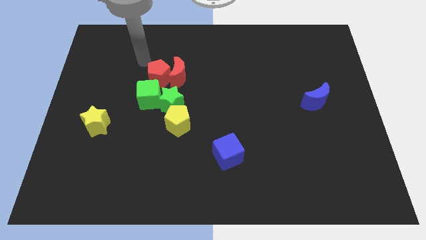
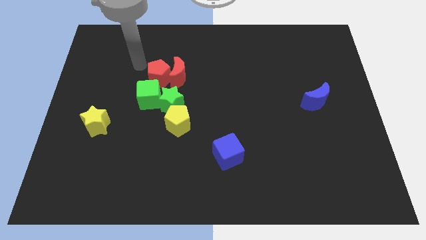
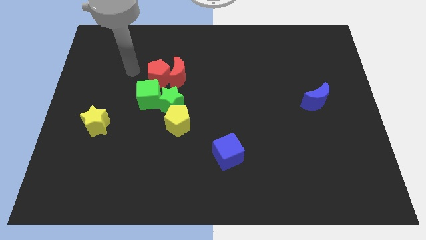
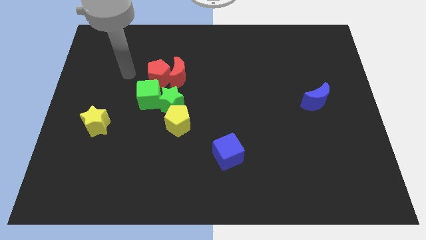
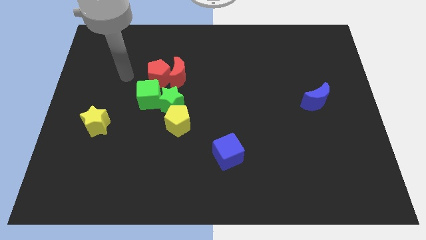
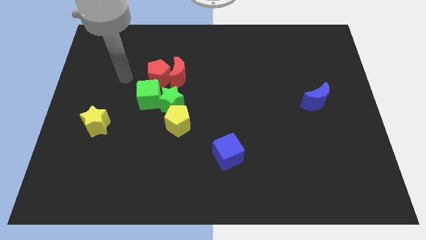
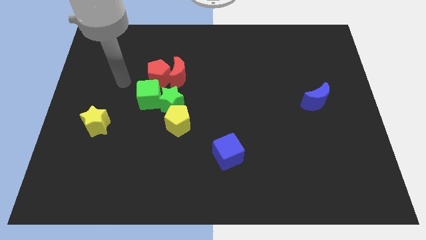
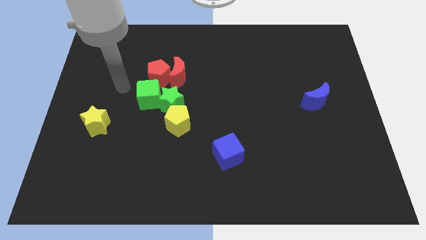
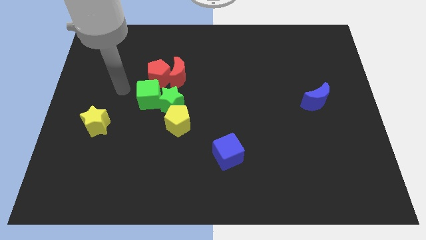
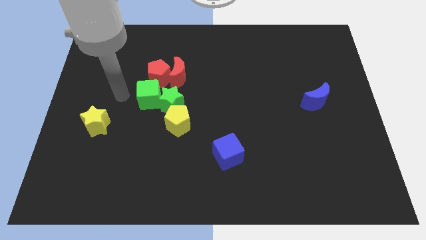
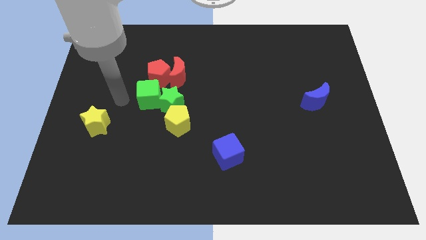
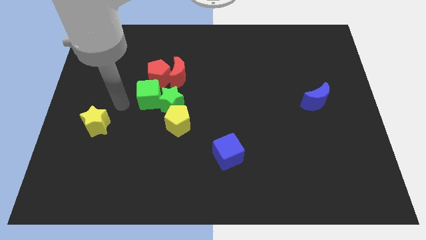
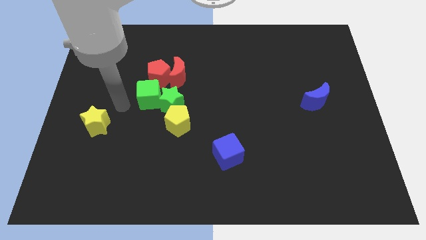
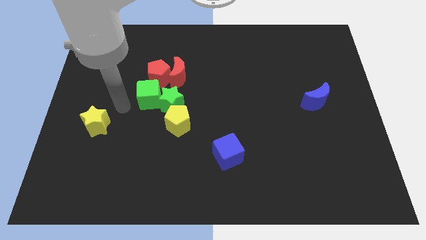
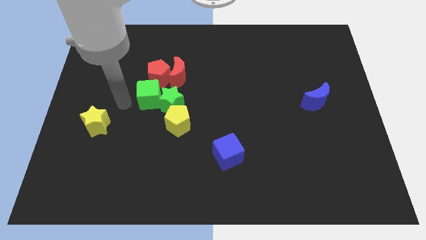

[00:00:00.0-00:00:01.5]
place your arm to the left of green cube

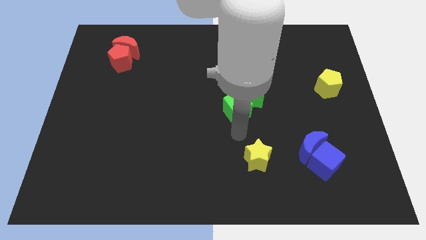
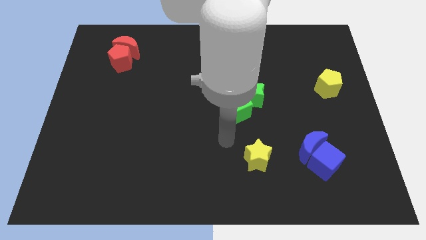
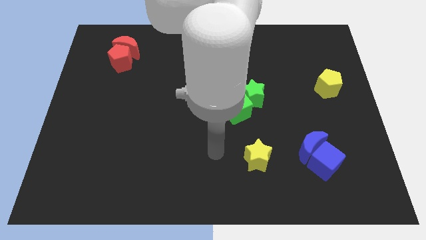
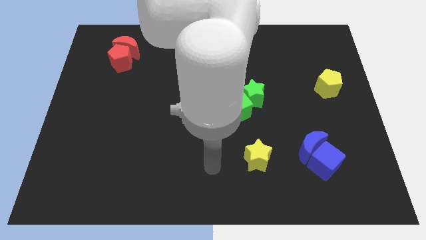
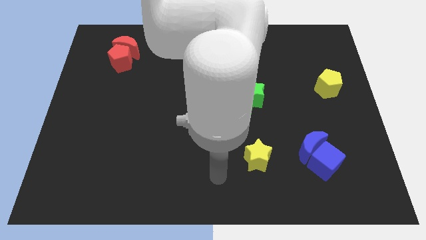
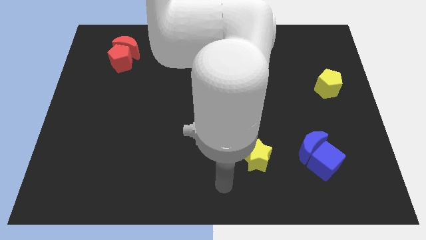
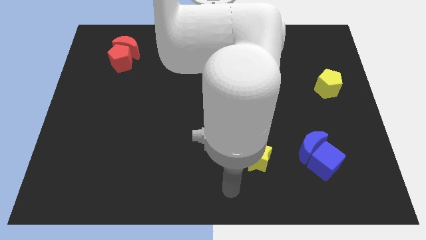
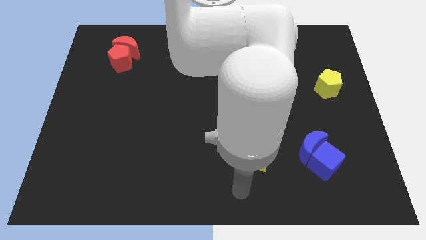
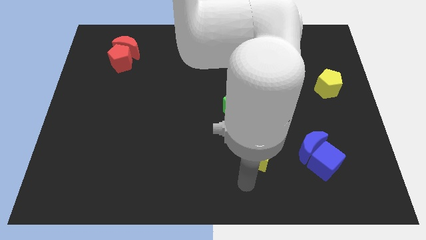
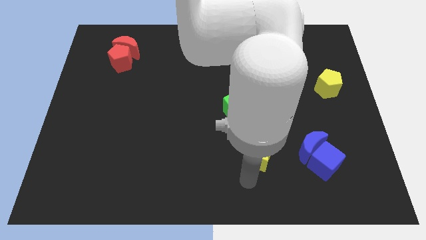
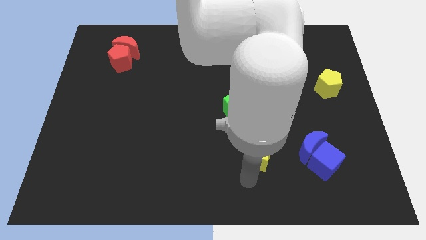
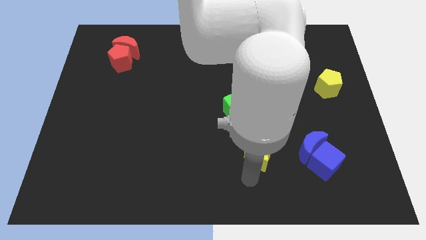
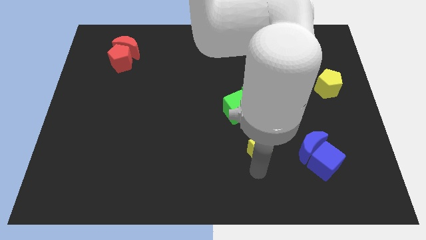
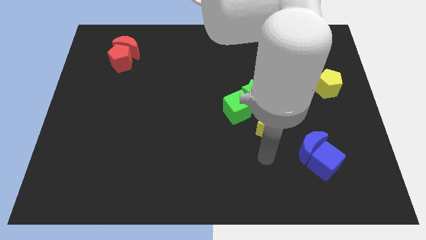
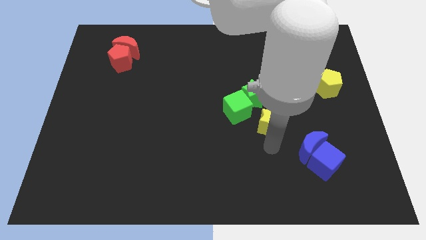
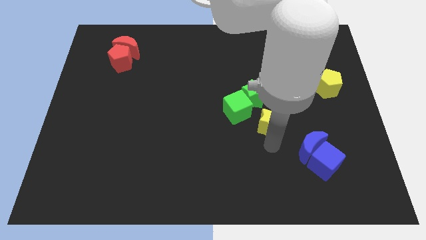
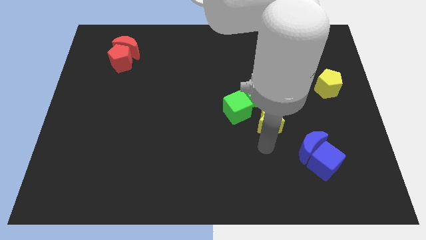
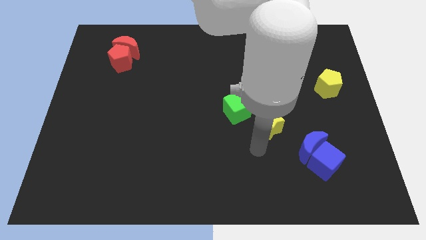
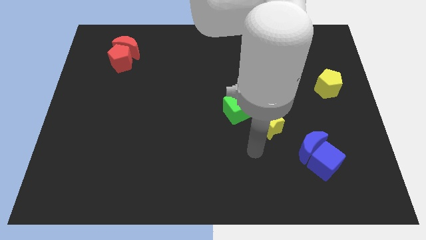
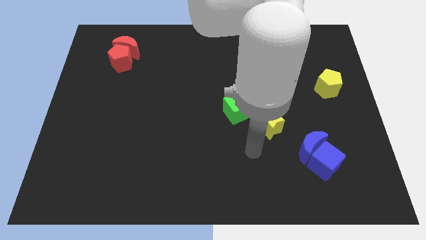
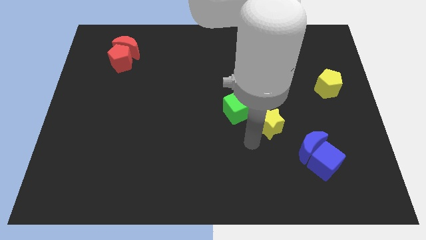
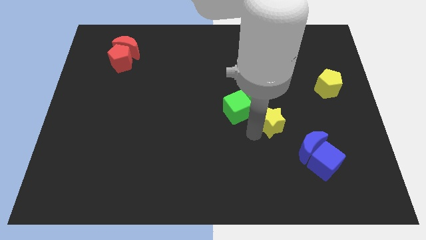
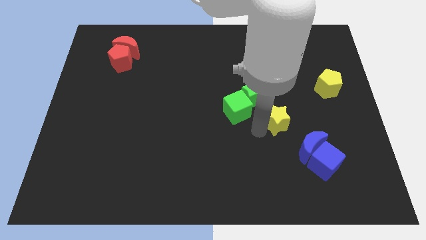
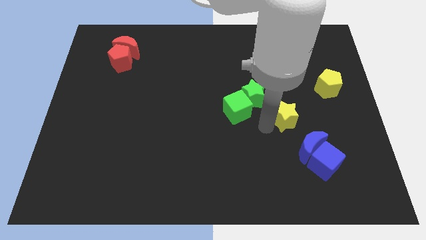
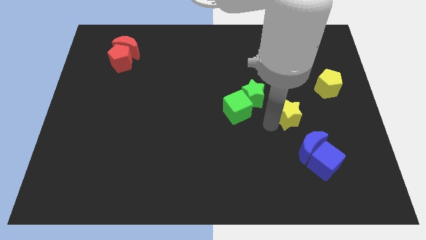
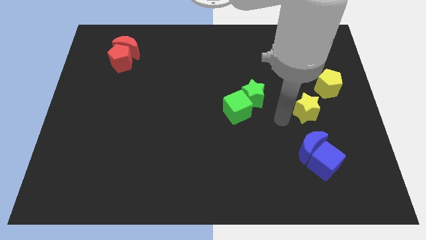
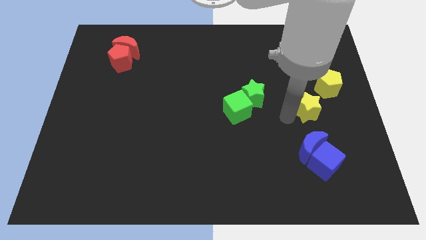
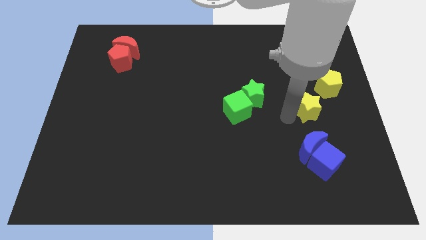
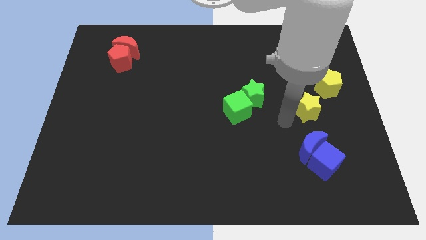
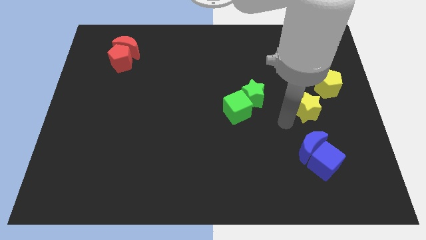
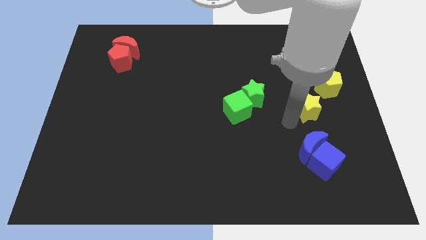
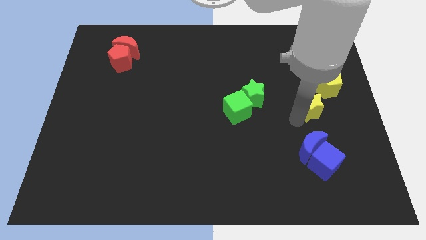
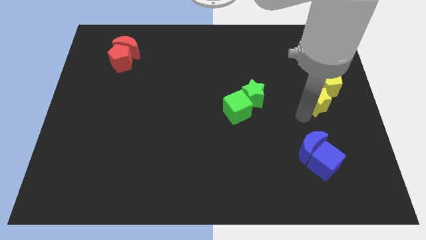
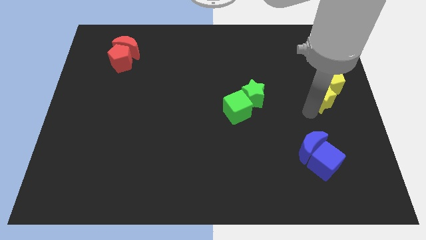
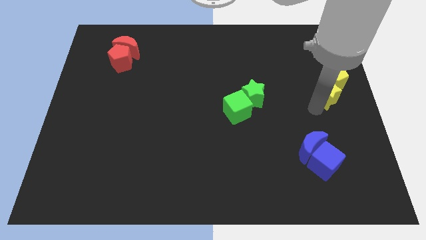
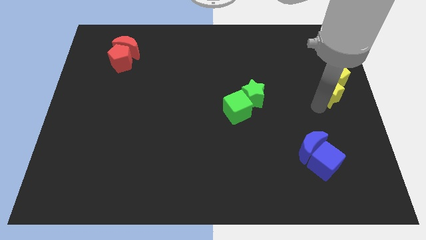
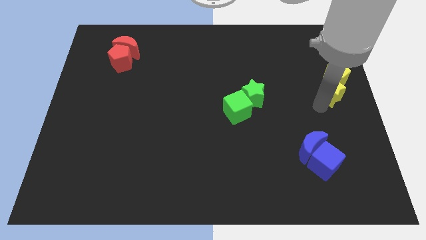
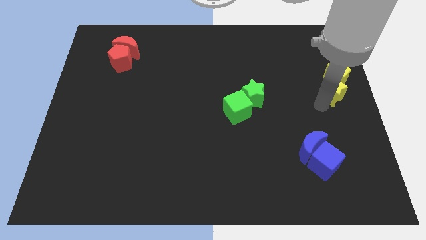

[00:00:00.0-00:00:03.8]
push the yellow star into the yellow pentagon

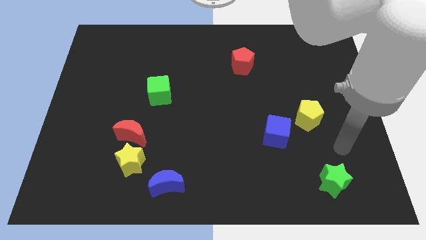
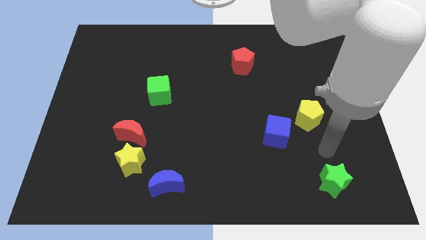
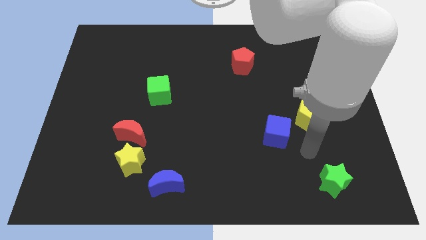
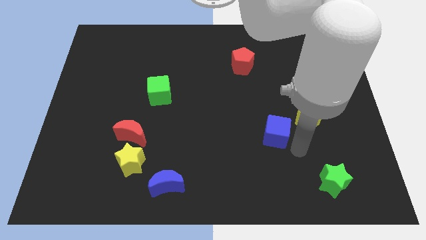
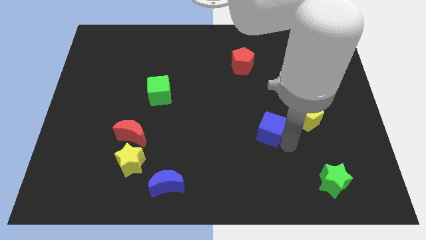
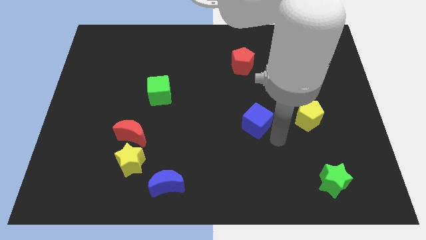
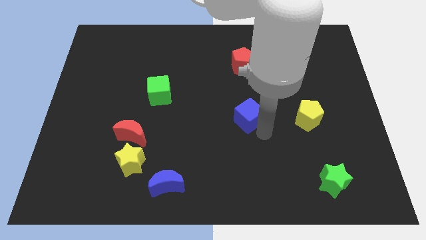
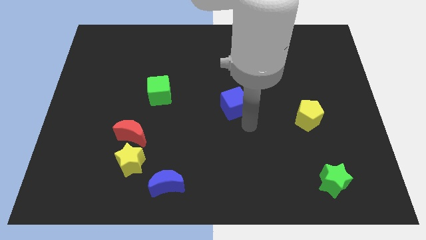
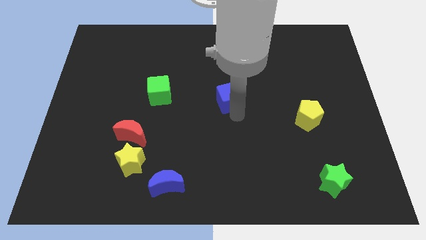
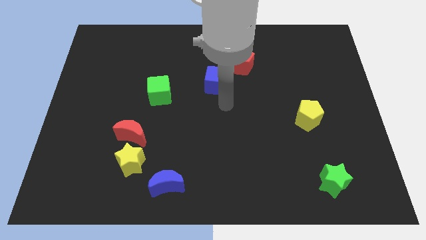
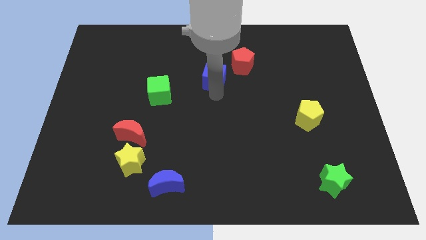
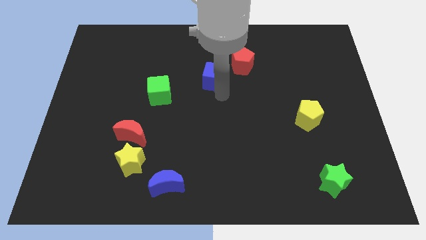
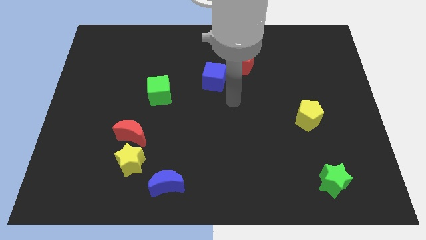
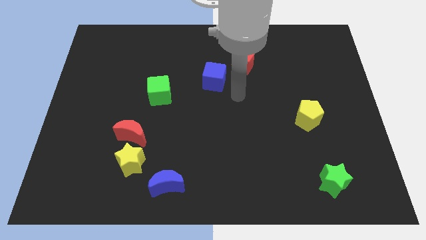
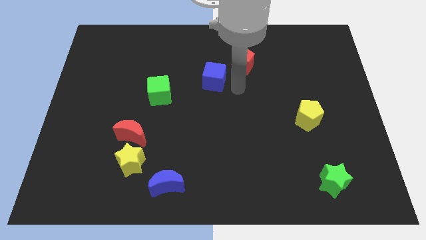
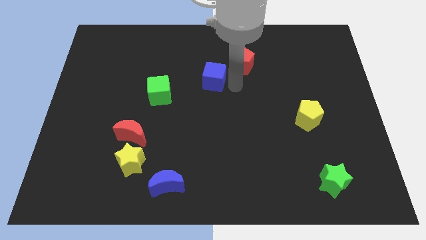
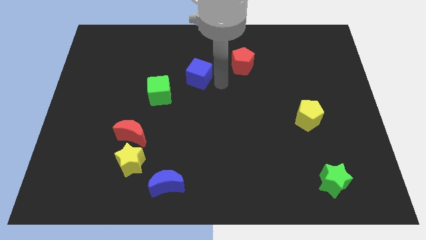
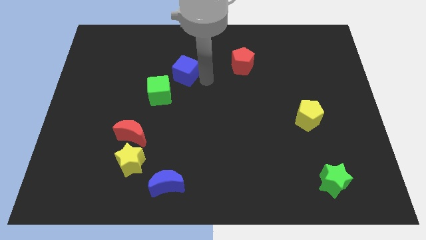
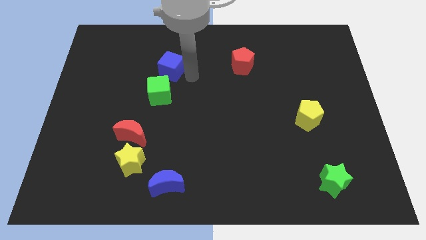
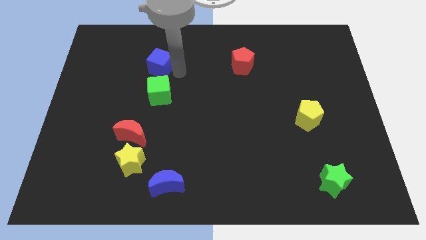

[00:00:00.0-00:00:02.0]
push the blue cube to the top left corner

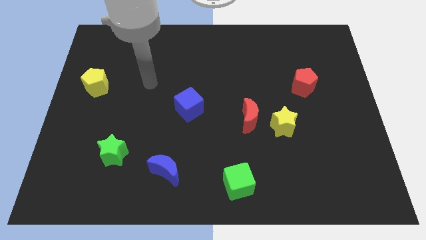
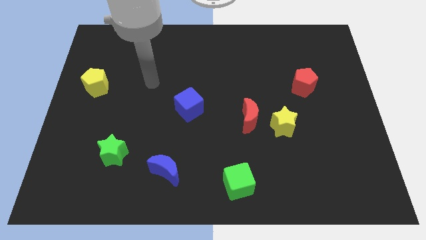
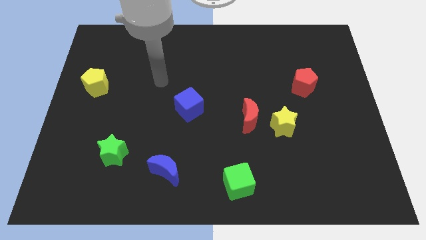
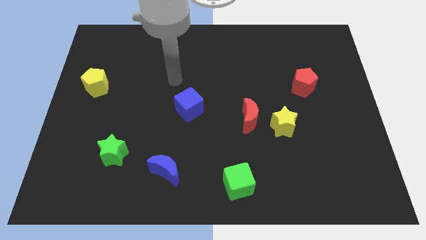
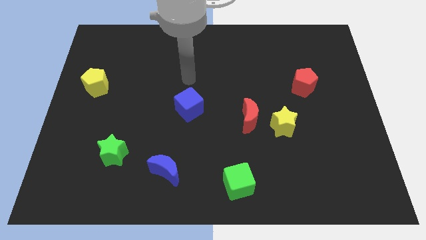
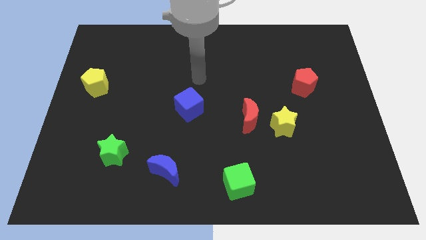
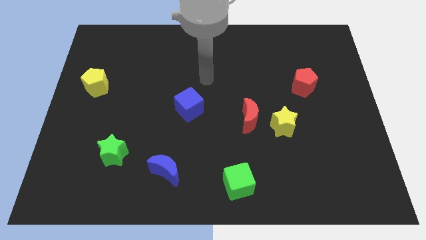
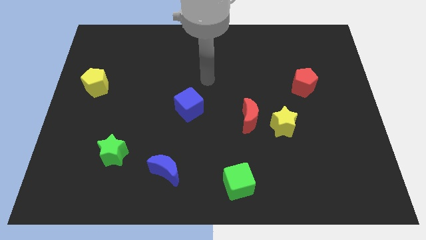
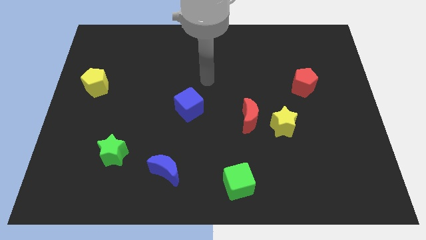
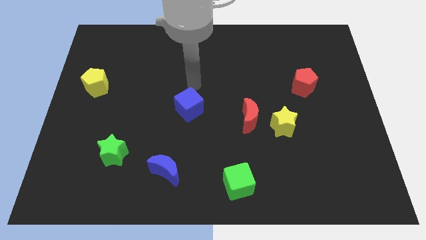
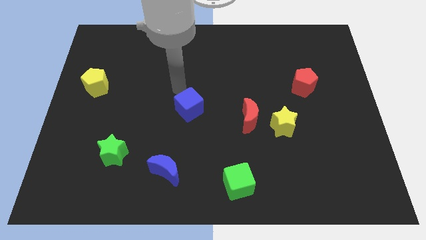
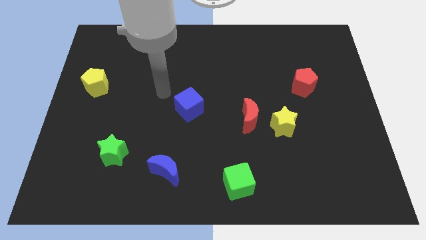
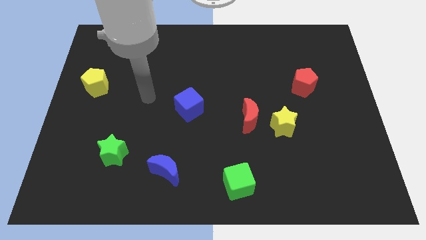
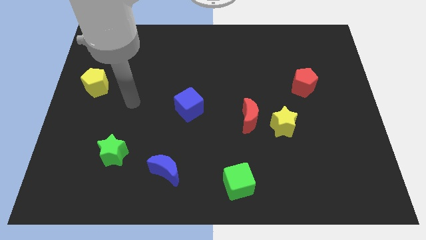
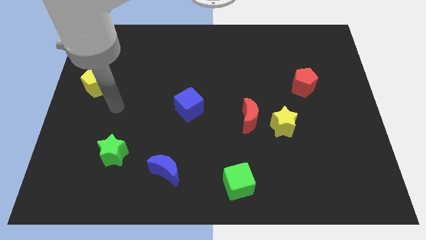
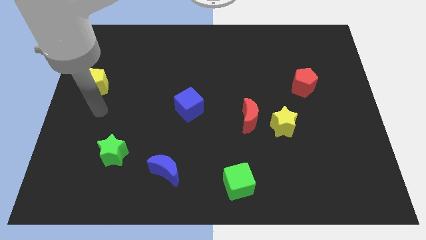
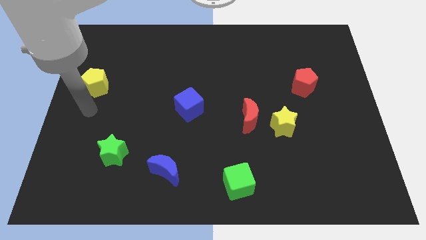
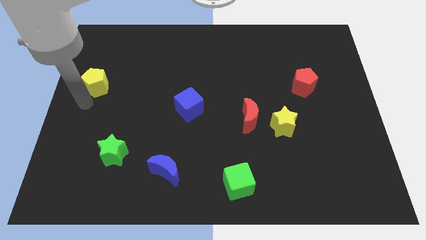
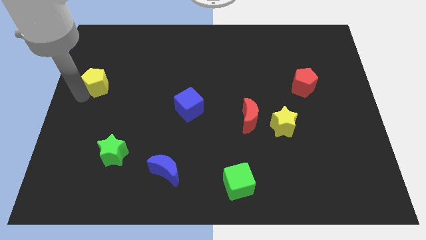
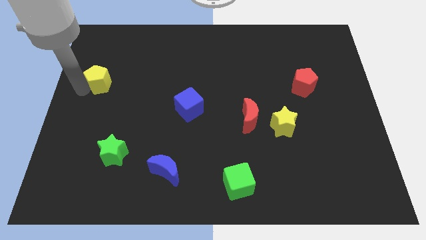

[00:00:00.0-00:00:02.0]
tap the left side of yellow pentagon
